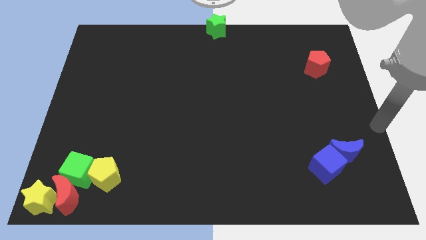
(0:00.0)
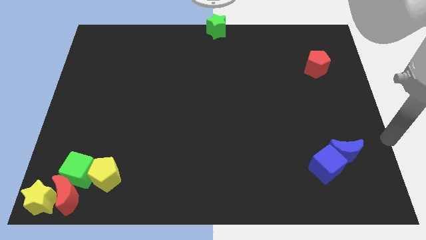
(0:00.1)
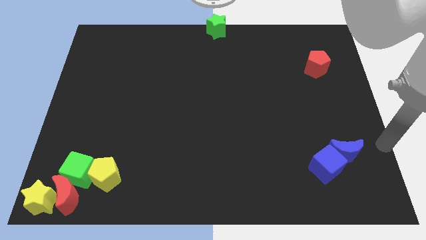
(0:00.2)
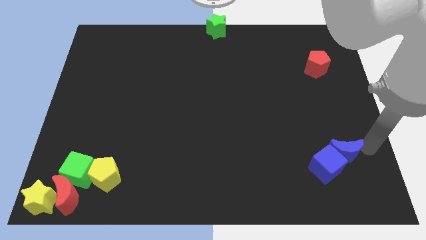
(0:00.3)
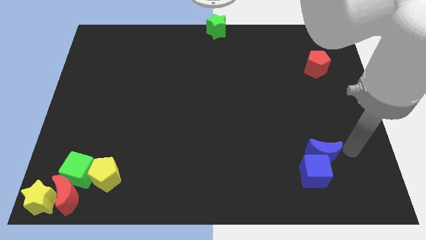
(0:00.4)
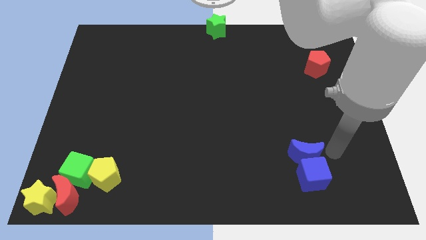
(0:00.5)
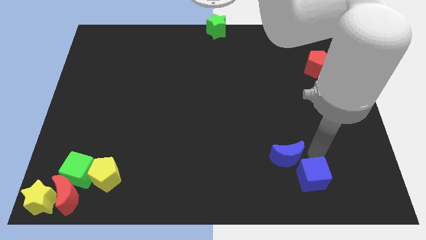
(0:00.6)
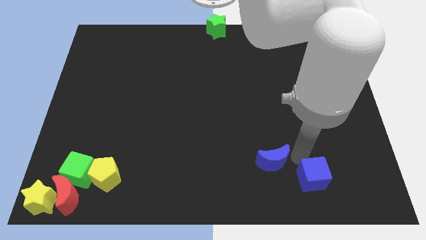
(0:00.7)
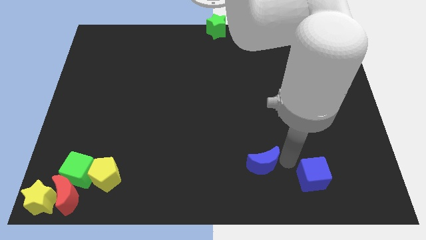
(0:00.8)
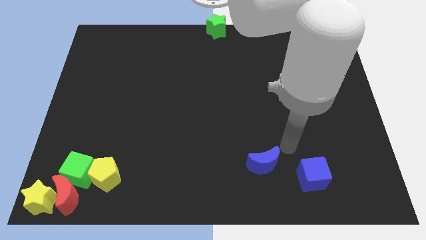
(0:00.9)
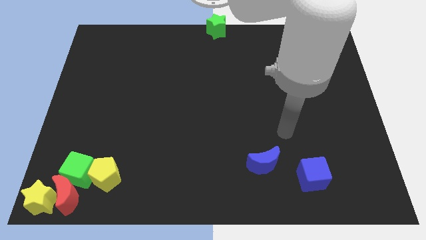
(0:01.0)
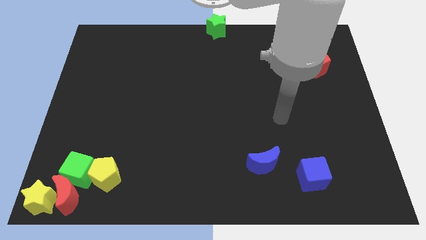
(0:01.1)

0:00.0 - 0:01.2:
separate the blue crescent from the blue cube

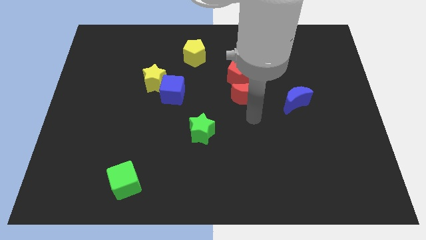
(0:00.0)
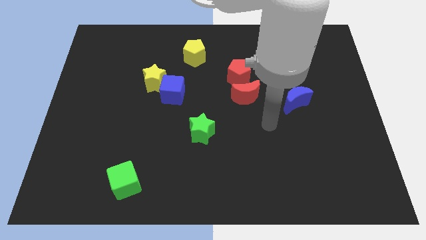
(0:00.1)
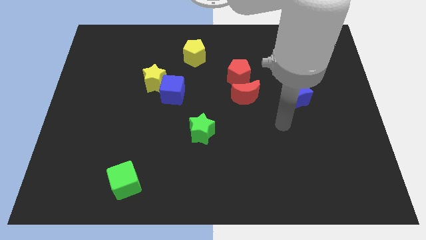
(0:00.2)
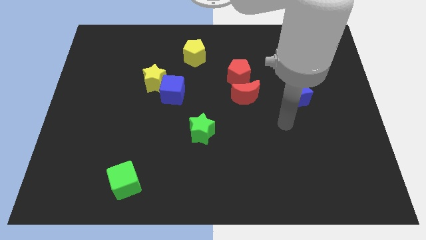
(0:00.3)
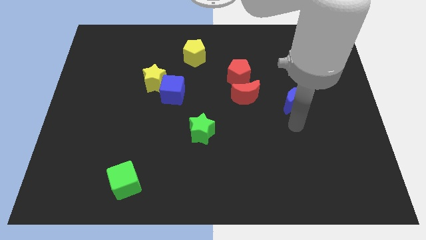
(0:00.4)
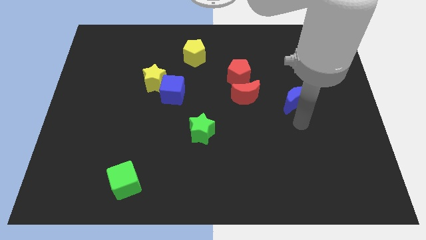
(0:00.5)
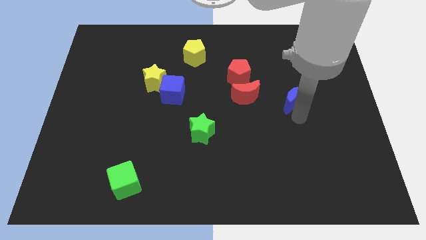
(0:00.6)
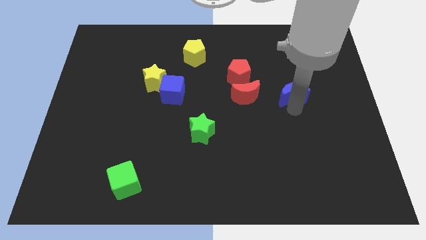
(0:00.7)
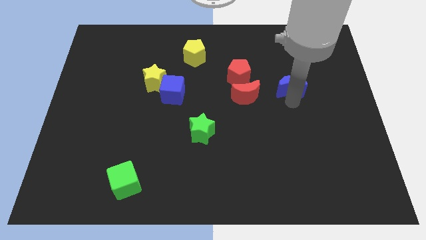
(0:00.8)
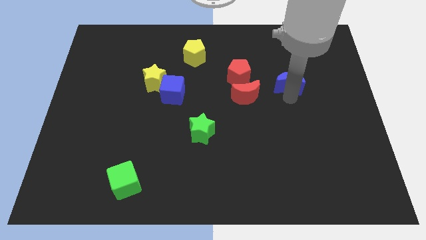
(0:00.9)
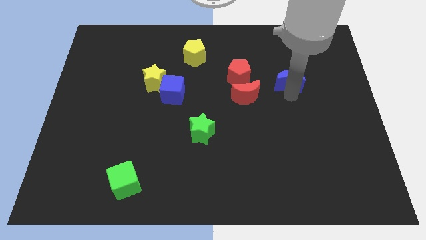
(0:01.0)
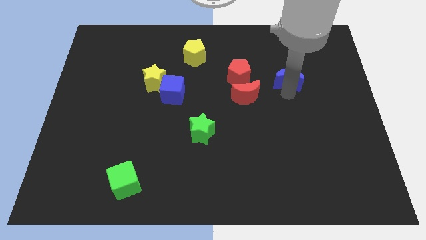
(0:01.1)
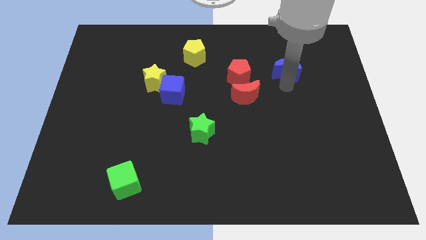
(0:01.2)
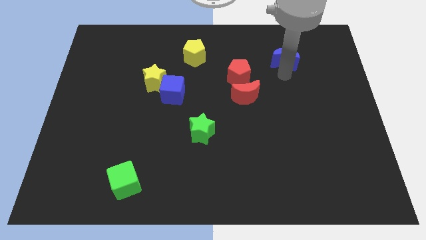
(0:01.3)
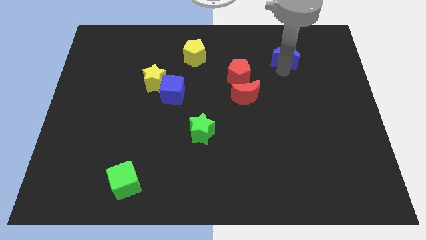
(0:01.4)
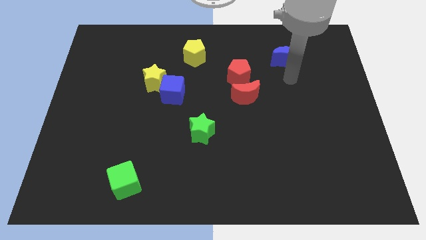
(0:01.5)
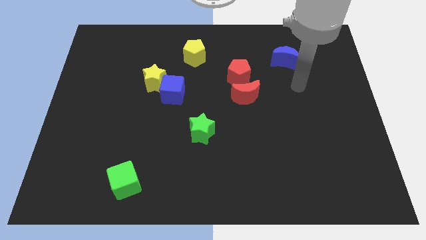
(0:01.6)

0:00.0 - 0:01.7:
move the blue moon towards the top left corner of the board

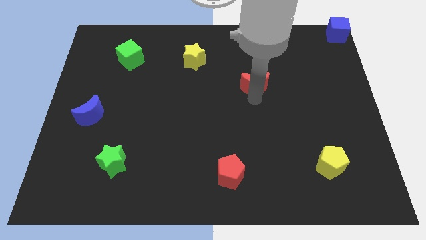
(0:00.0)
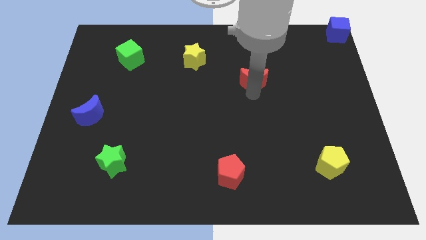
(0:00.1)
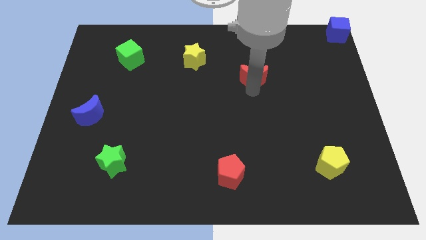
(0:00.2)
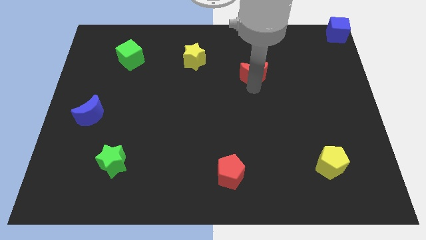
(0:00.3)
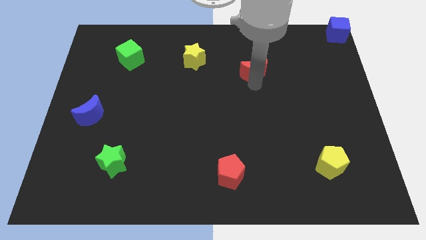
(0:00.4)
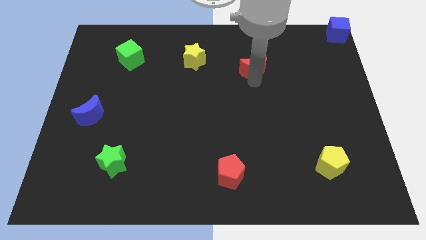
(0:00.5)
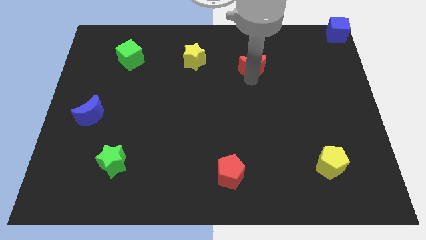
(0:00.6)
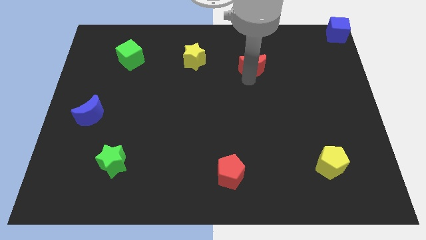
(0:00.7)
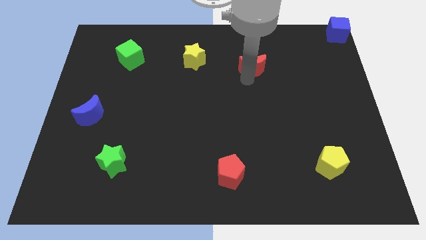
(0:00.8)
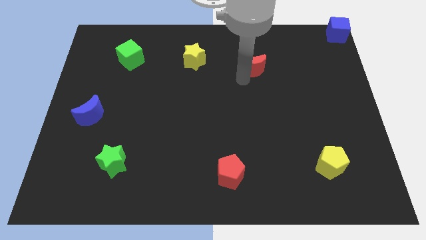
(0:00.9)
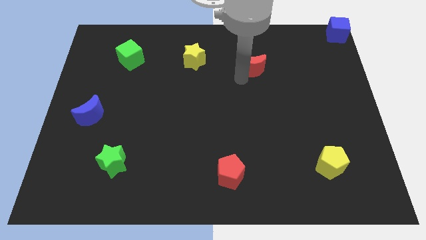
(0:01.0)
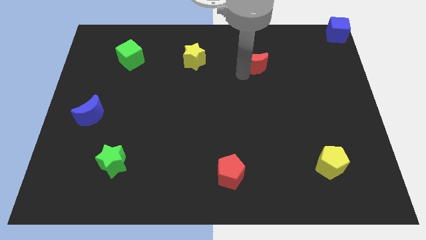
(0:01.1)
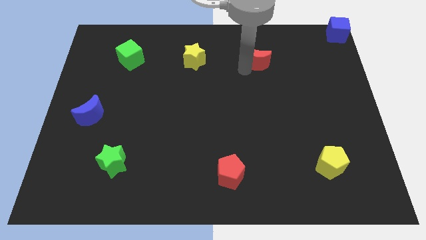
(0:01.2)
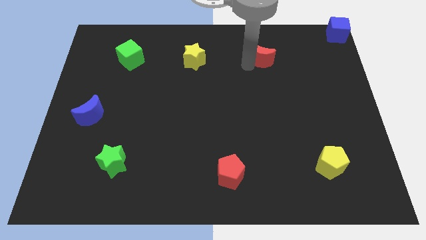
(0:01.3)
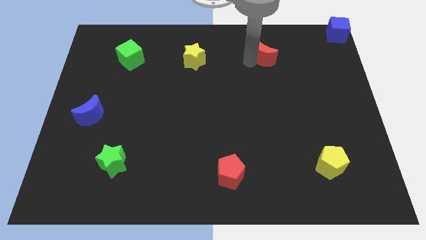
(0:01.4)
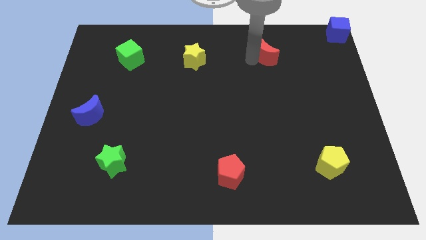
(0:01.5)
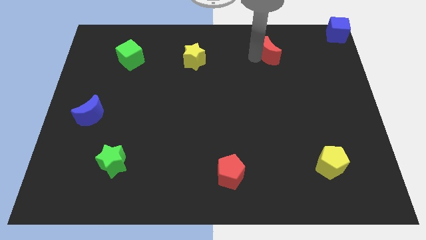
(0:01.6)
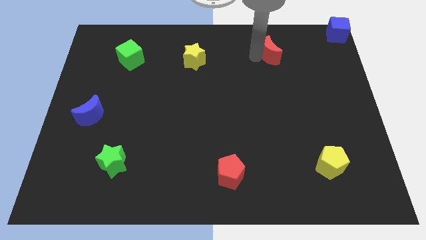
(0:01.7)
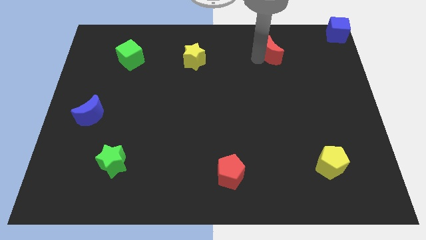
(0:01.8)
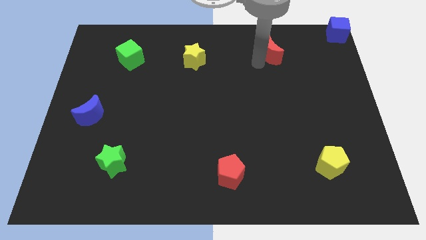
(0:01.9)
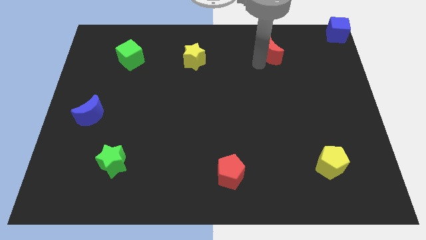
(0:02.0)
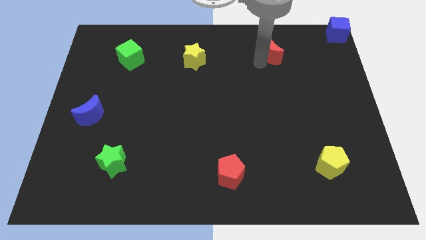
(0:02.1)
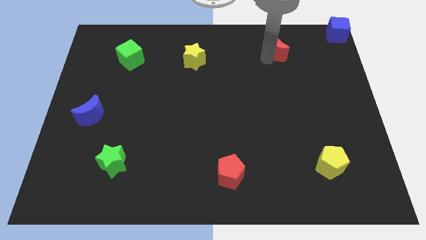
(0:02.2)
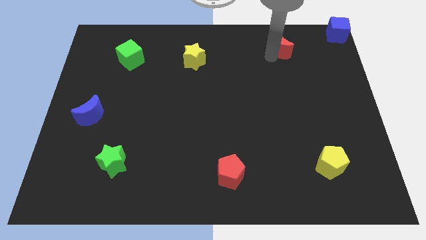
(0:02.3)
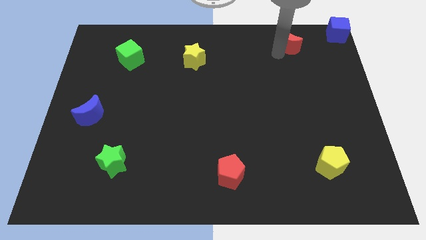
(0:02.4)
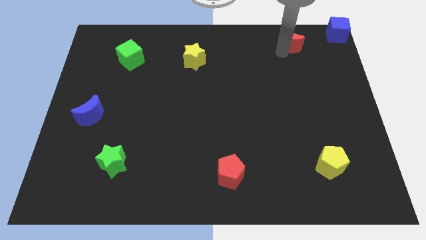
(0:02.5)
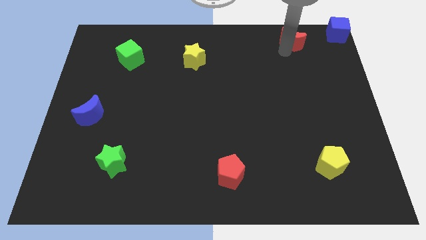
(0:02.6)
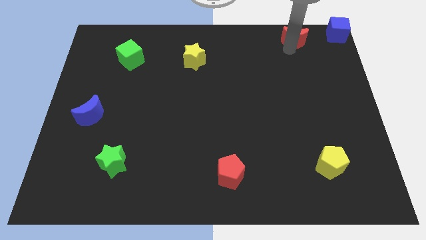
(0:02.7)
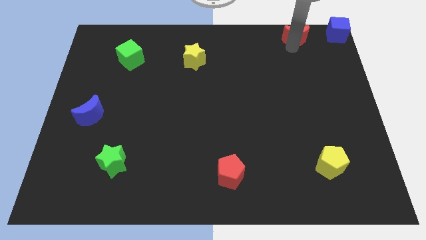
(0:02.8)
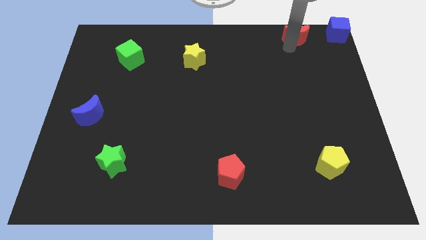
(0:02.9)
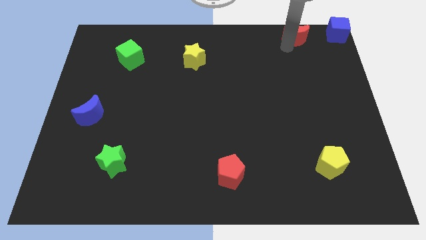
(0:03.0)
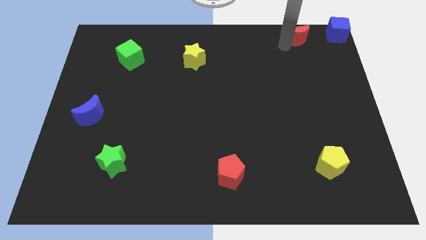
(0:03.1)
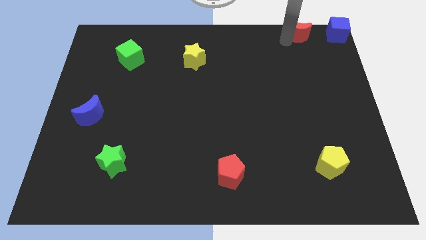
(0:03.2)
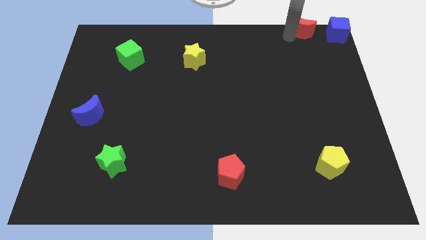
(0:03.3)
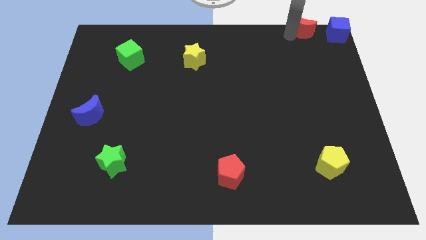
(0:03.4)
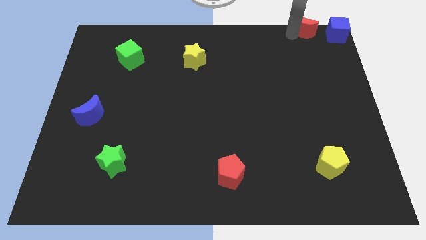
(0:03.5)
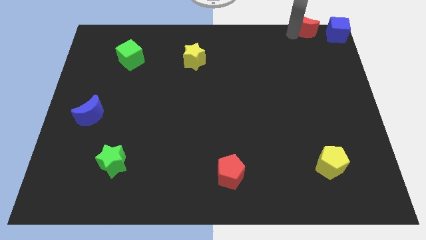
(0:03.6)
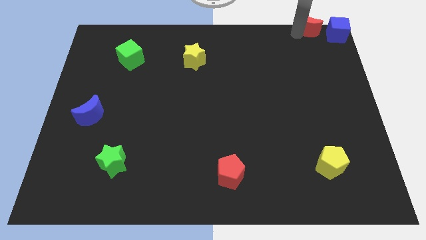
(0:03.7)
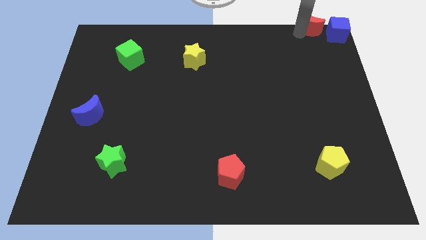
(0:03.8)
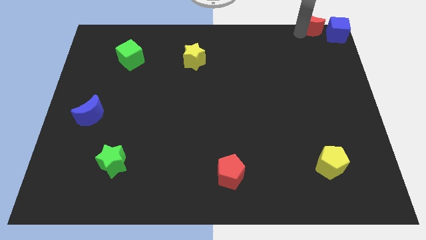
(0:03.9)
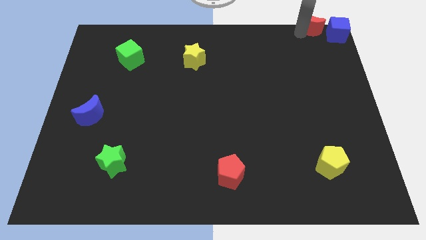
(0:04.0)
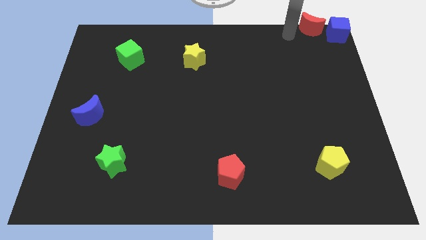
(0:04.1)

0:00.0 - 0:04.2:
place the red moon to the left of blue cube

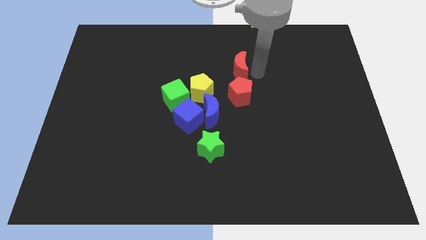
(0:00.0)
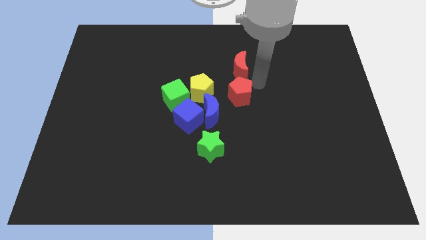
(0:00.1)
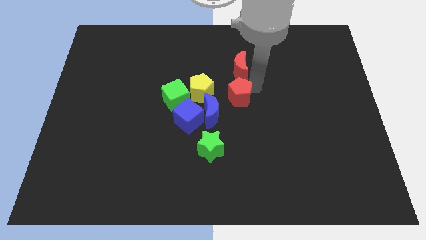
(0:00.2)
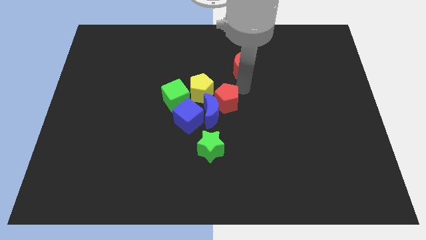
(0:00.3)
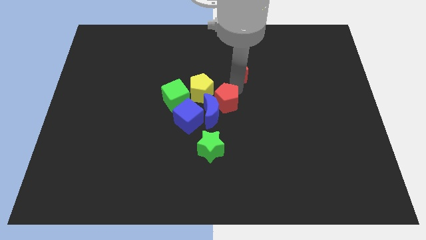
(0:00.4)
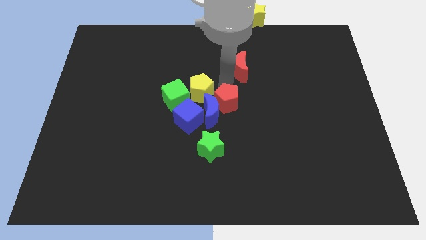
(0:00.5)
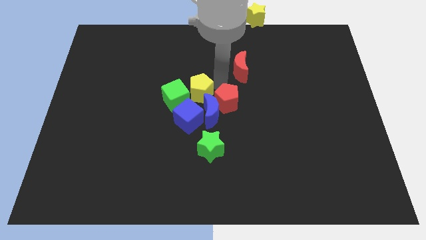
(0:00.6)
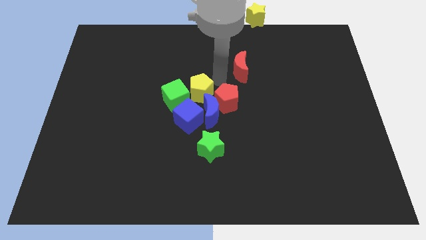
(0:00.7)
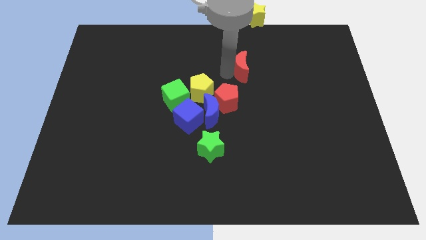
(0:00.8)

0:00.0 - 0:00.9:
place the red pentagon between yellow pentagon and blue moon

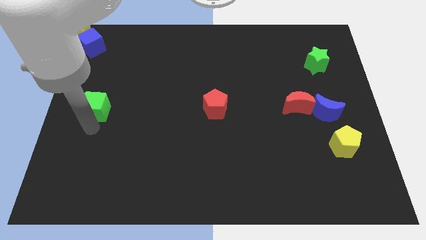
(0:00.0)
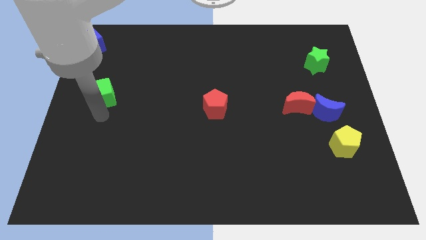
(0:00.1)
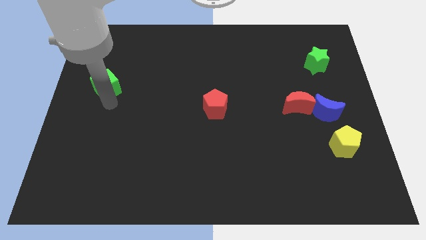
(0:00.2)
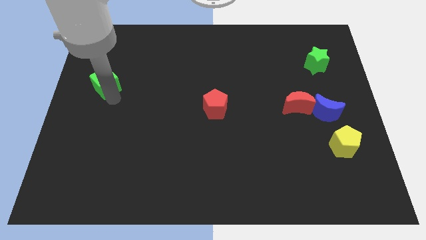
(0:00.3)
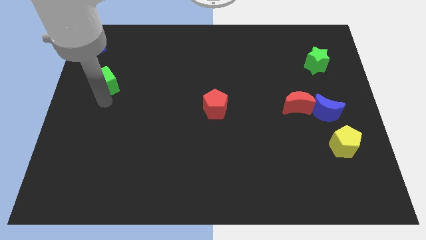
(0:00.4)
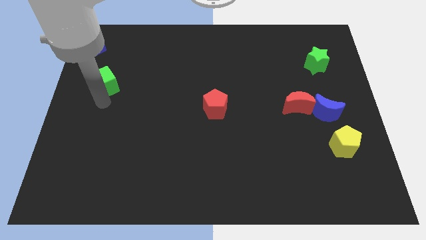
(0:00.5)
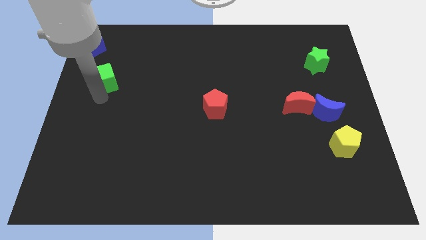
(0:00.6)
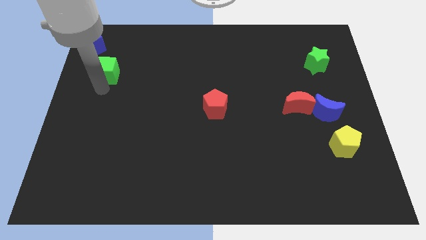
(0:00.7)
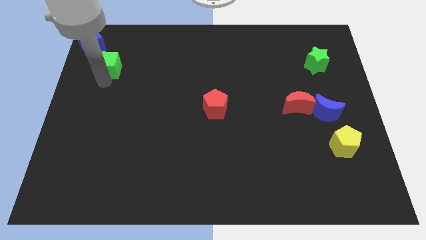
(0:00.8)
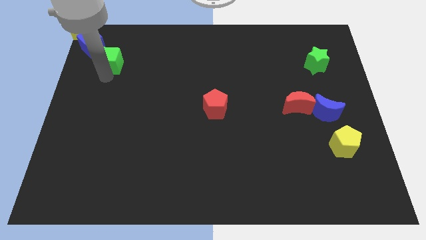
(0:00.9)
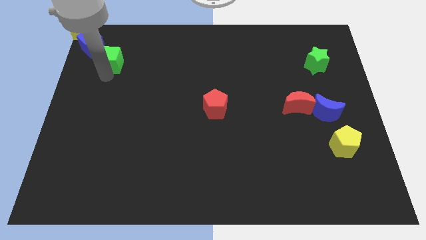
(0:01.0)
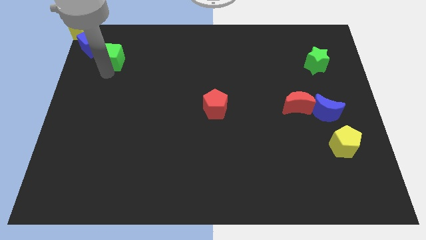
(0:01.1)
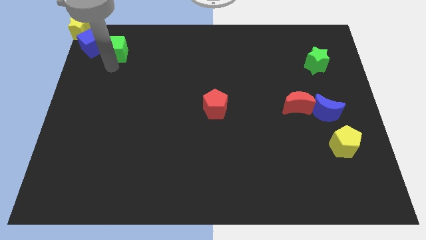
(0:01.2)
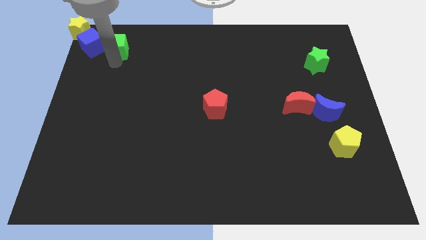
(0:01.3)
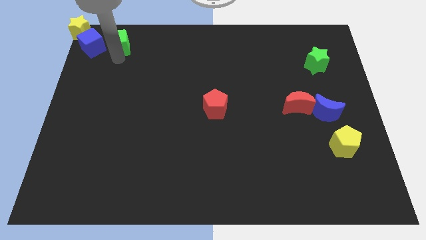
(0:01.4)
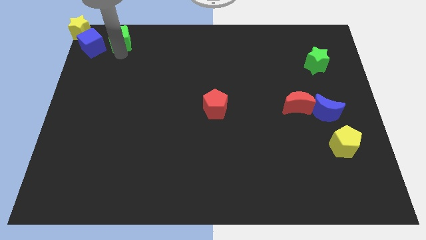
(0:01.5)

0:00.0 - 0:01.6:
push the green cube to the right of the blue cube
